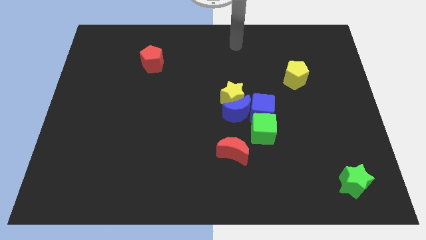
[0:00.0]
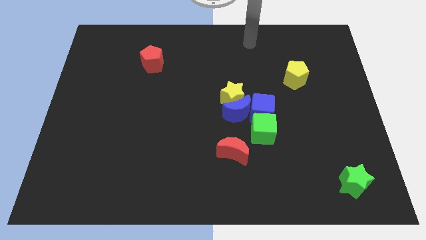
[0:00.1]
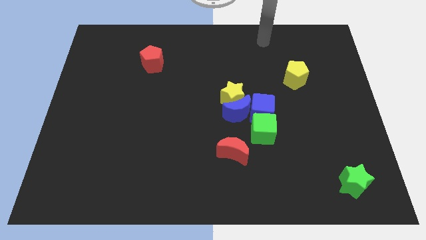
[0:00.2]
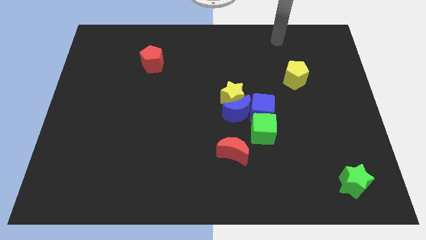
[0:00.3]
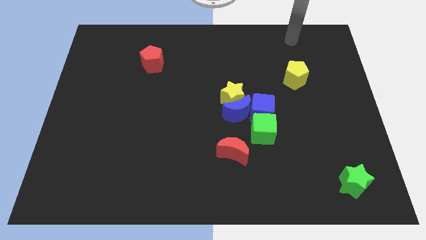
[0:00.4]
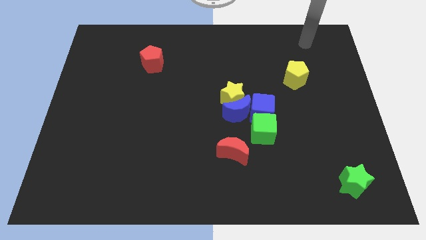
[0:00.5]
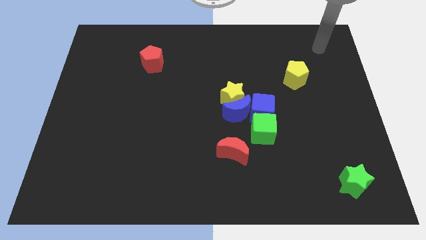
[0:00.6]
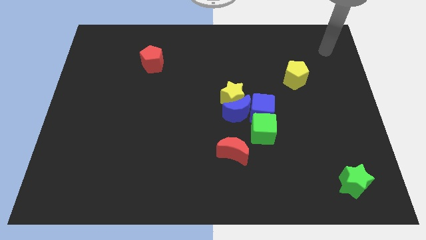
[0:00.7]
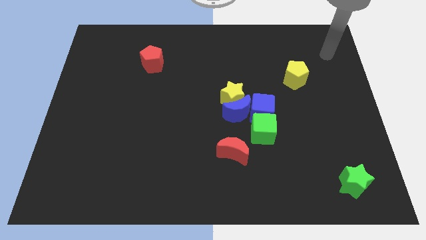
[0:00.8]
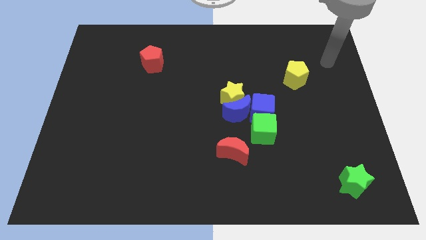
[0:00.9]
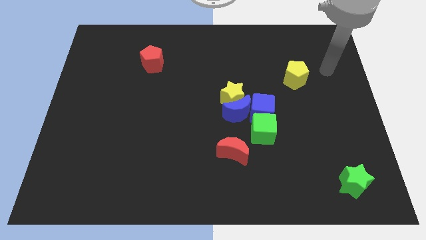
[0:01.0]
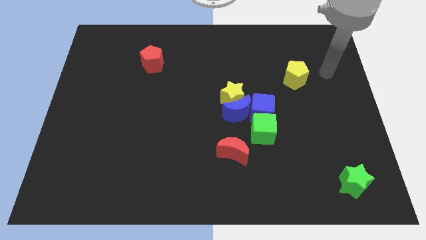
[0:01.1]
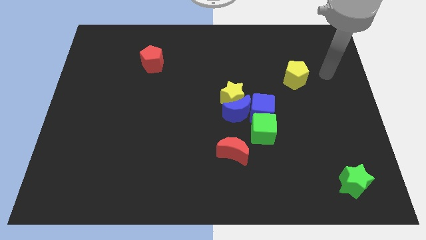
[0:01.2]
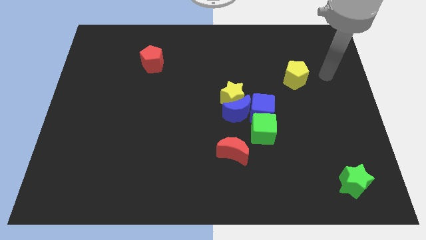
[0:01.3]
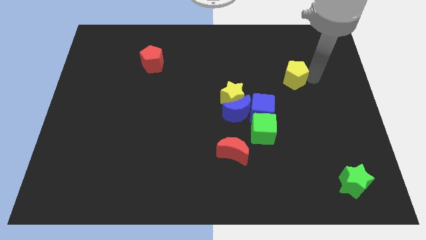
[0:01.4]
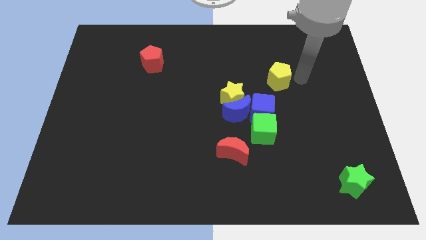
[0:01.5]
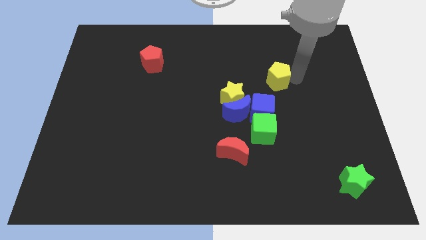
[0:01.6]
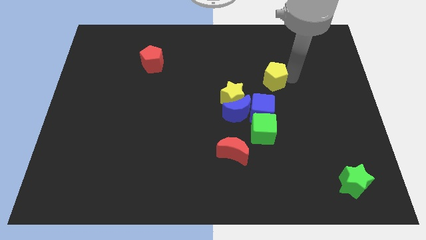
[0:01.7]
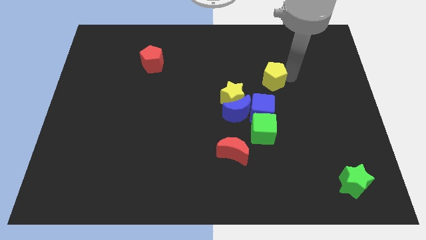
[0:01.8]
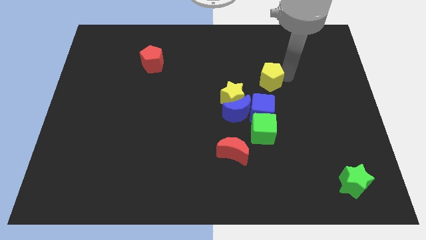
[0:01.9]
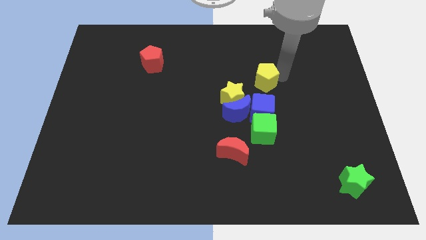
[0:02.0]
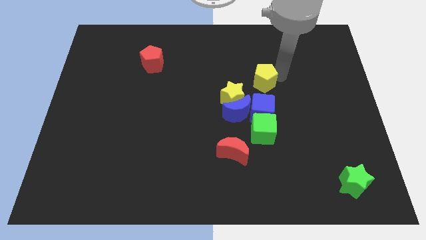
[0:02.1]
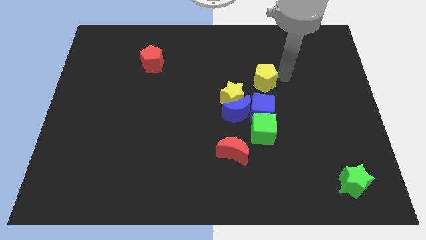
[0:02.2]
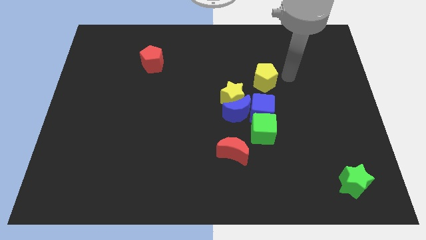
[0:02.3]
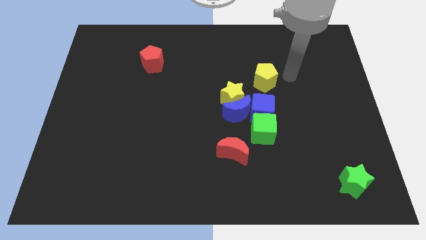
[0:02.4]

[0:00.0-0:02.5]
slightly push the yellow pentagon above the blue cube

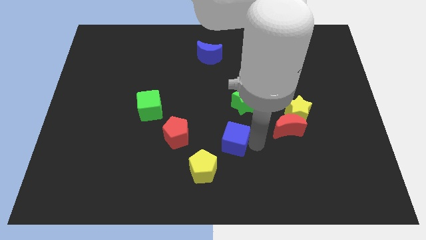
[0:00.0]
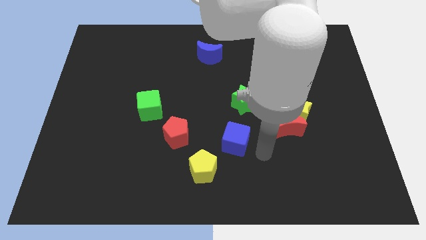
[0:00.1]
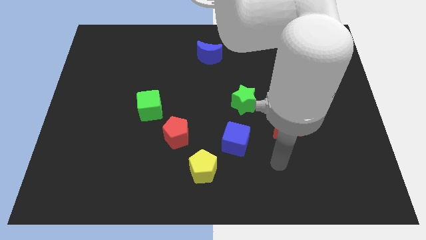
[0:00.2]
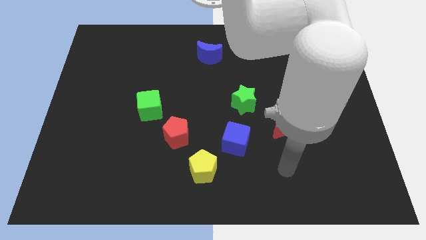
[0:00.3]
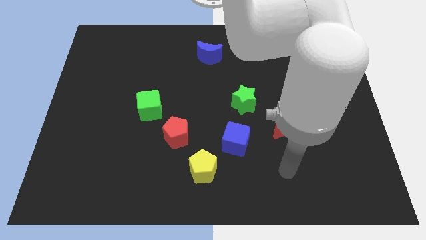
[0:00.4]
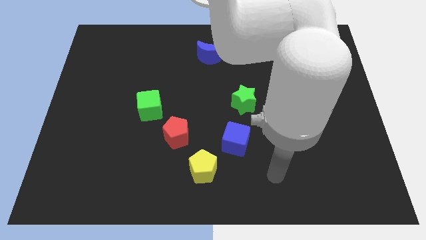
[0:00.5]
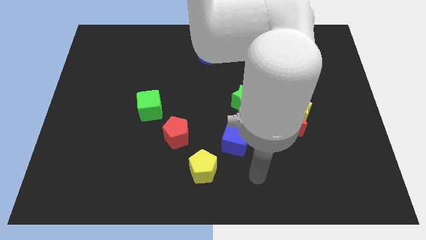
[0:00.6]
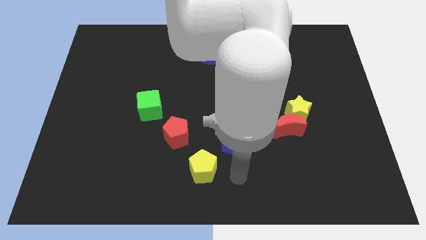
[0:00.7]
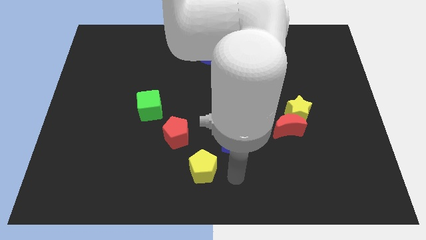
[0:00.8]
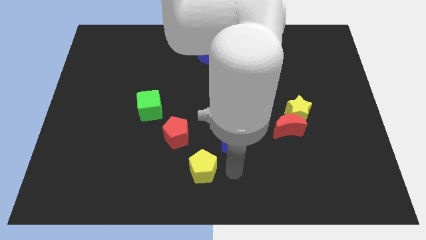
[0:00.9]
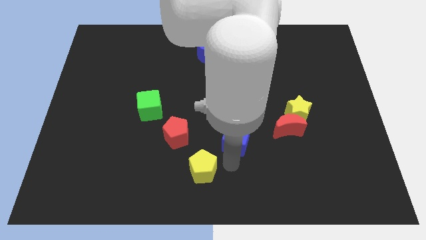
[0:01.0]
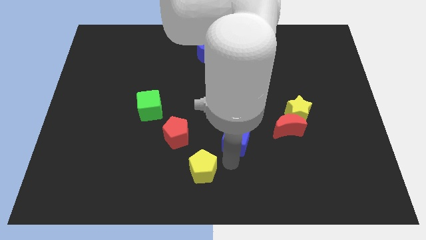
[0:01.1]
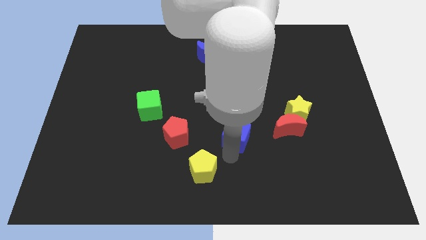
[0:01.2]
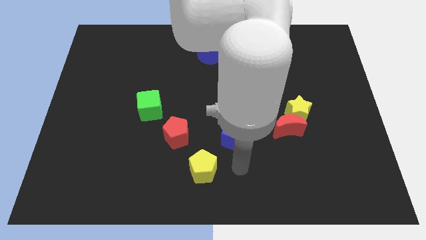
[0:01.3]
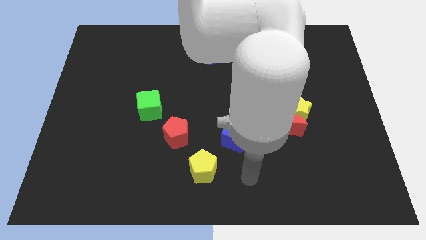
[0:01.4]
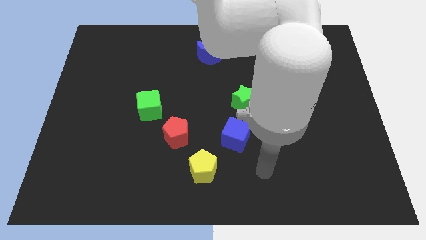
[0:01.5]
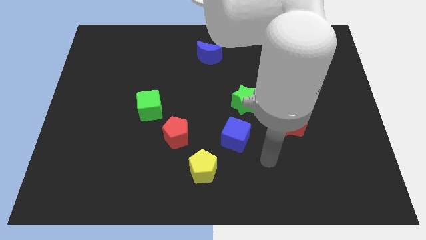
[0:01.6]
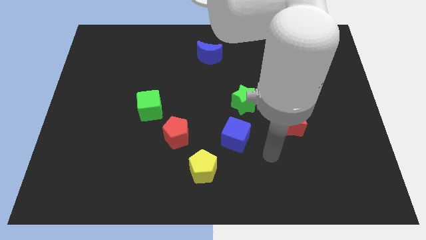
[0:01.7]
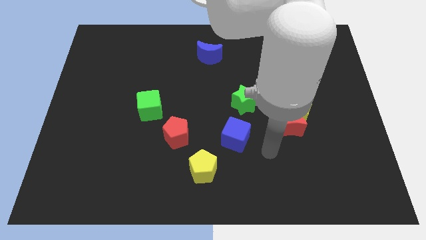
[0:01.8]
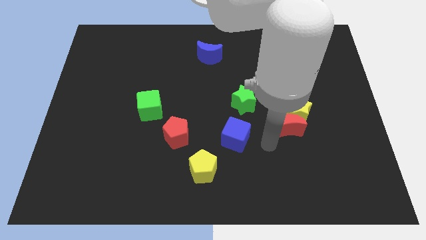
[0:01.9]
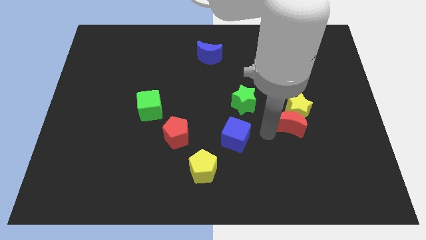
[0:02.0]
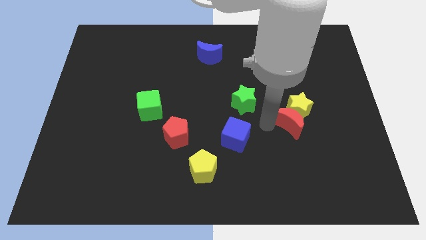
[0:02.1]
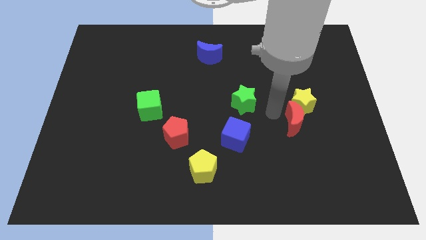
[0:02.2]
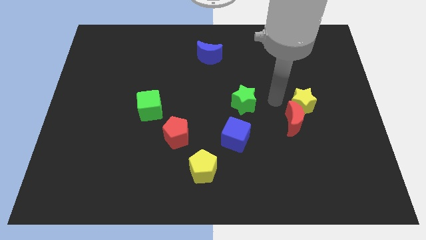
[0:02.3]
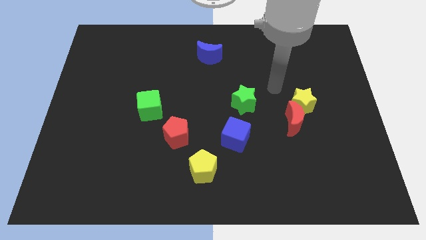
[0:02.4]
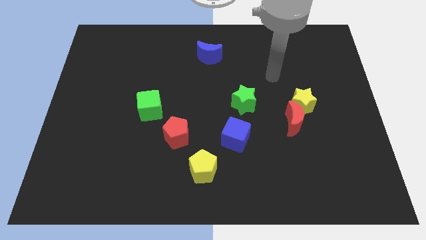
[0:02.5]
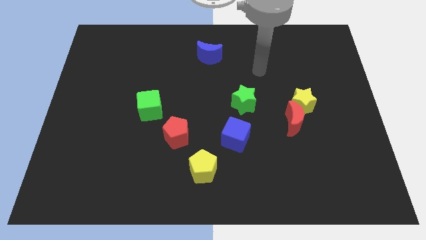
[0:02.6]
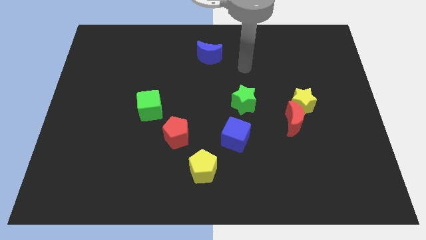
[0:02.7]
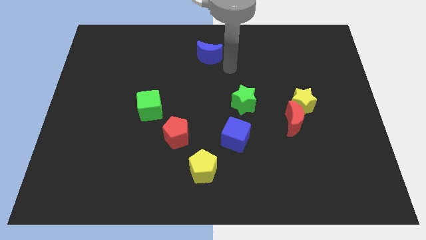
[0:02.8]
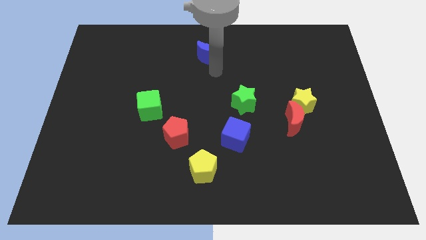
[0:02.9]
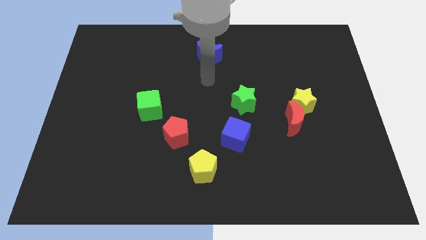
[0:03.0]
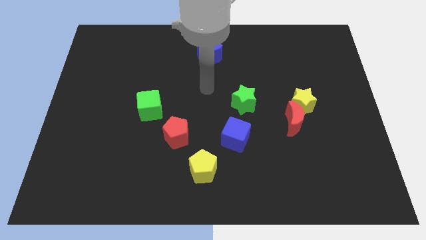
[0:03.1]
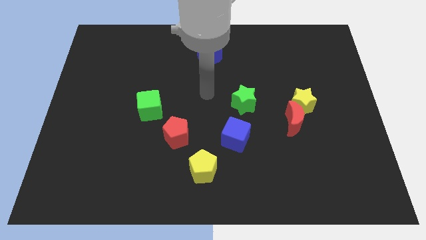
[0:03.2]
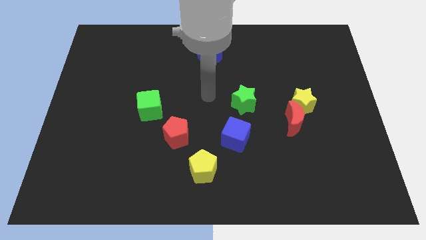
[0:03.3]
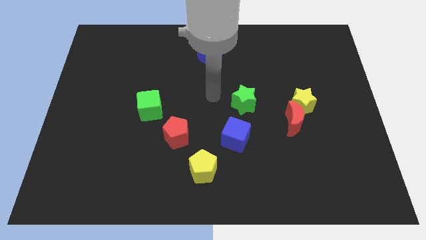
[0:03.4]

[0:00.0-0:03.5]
move your arm towards the center of the board

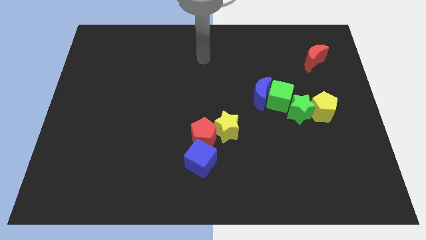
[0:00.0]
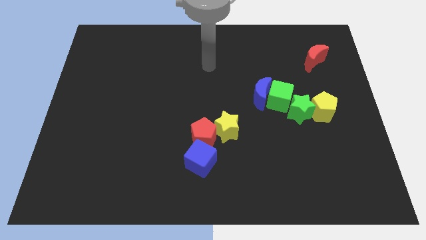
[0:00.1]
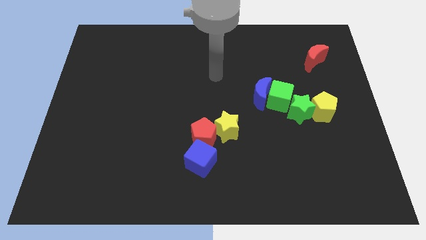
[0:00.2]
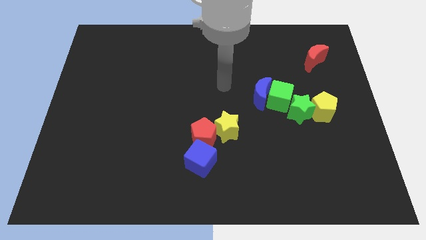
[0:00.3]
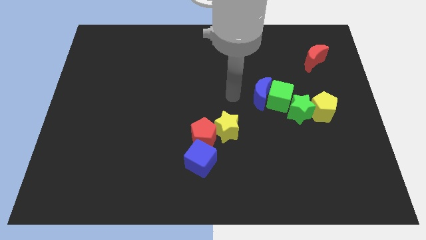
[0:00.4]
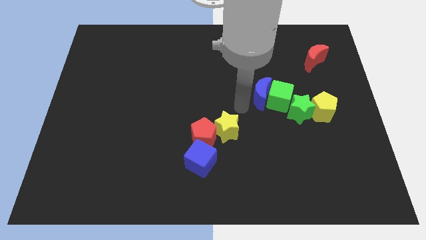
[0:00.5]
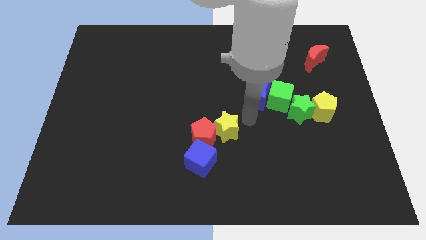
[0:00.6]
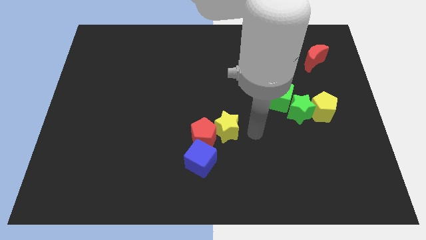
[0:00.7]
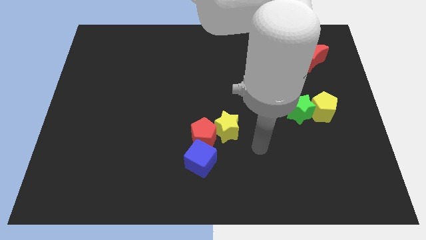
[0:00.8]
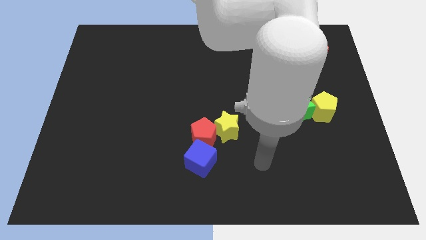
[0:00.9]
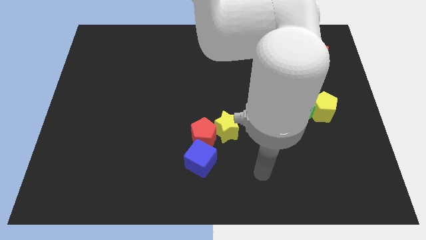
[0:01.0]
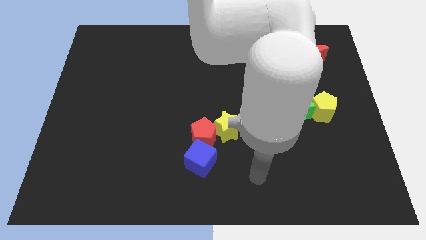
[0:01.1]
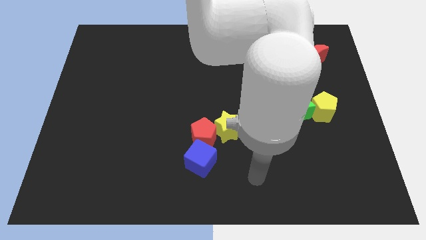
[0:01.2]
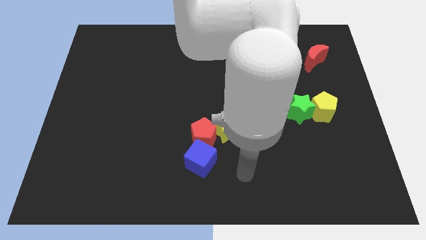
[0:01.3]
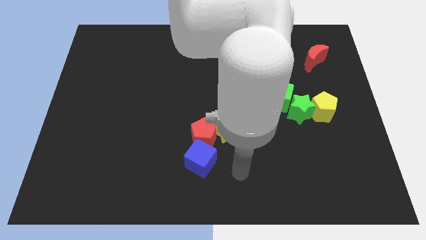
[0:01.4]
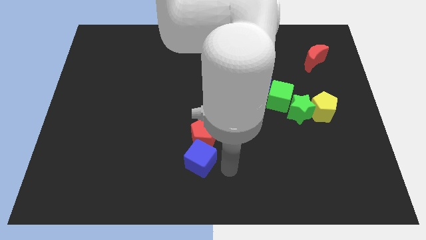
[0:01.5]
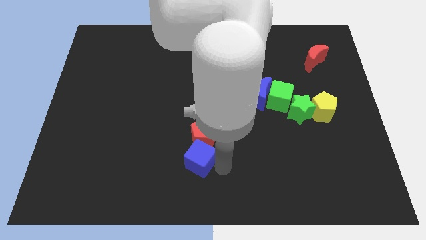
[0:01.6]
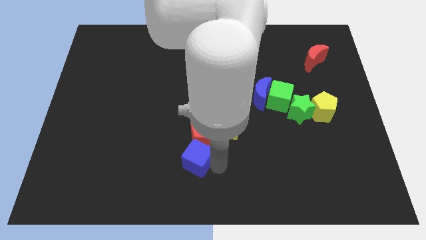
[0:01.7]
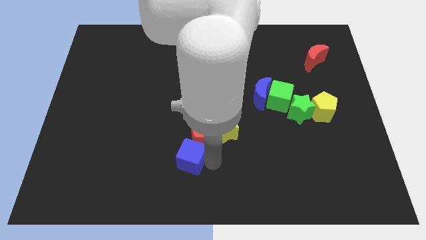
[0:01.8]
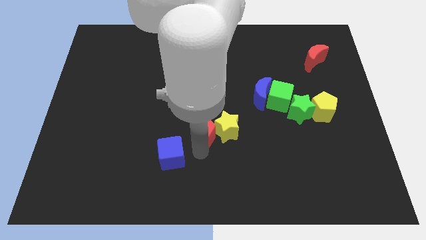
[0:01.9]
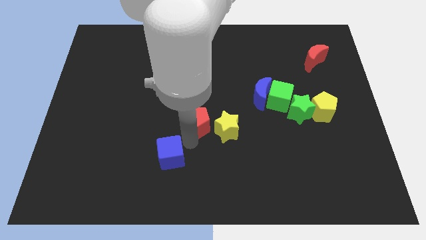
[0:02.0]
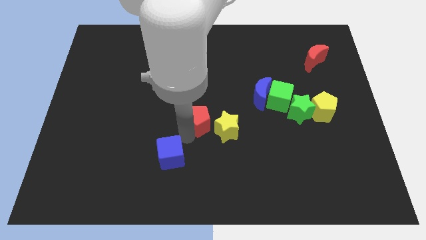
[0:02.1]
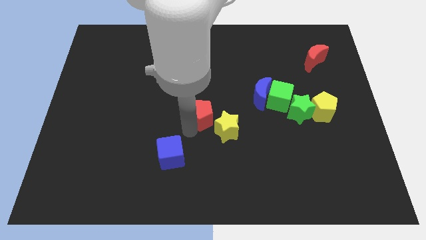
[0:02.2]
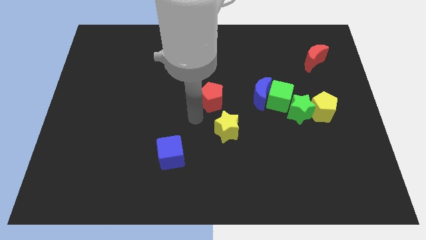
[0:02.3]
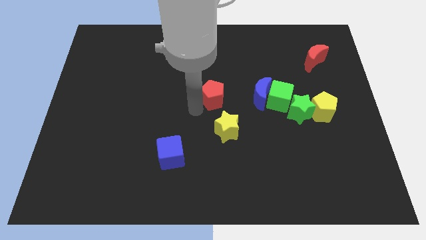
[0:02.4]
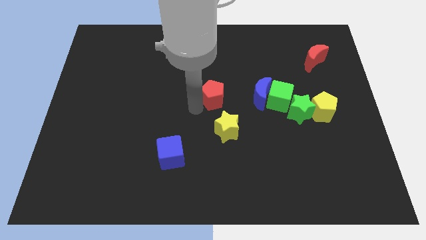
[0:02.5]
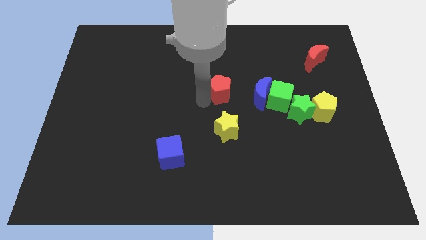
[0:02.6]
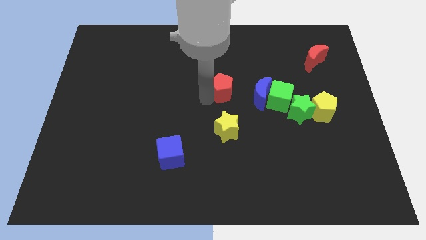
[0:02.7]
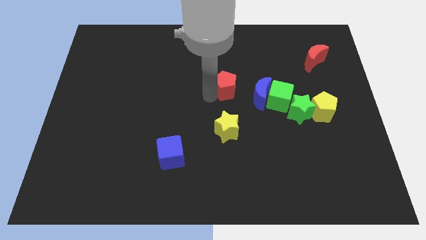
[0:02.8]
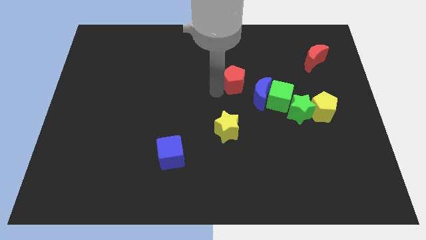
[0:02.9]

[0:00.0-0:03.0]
place the red pentagon above the yellow star
